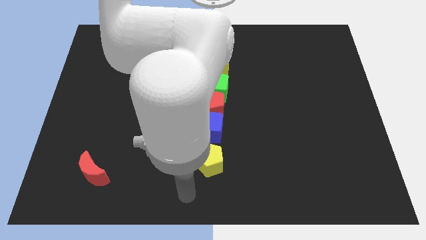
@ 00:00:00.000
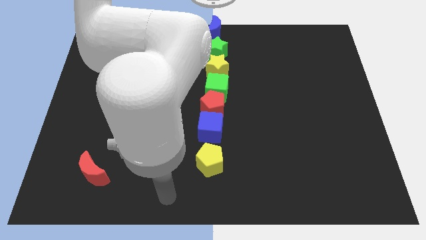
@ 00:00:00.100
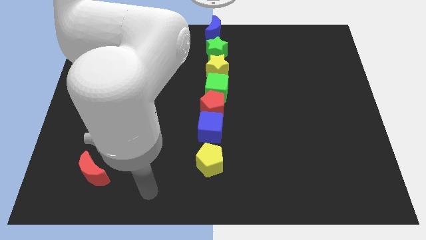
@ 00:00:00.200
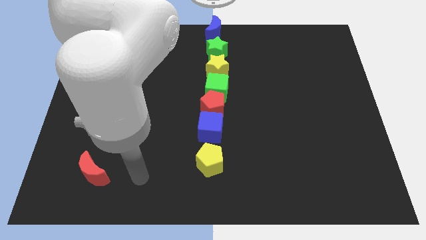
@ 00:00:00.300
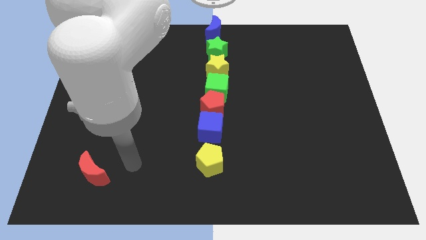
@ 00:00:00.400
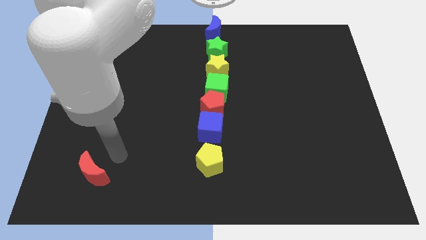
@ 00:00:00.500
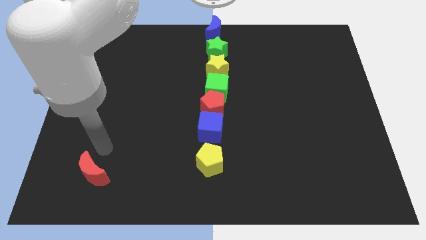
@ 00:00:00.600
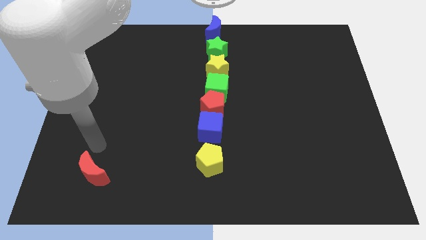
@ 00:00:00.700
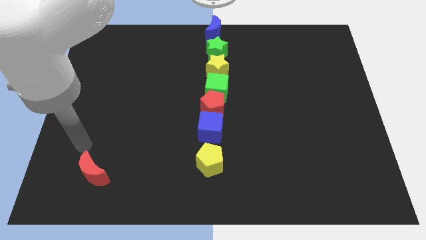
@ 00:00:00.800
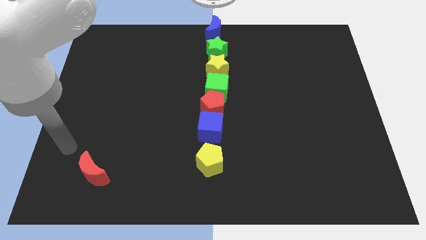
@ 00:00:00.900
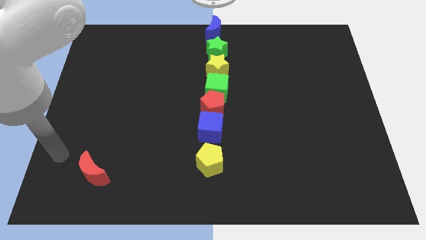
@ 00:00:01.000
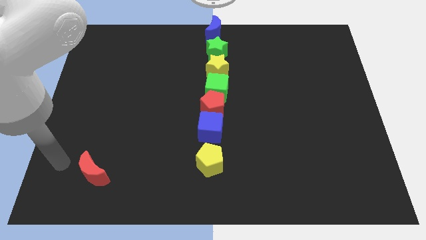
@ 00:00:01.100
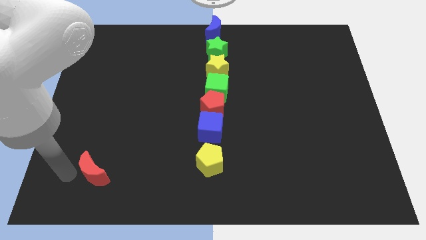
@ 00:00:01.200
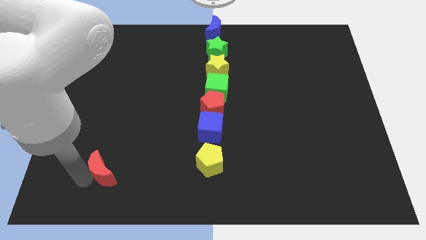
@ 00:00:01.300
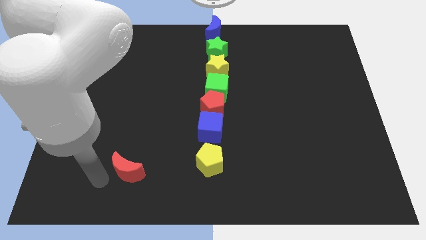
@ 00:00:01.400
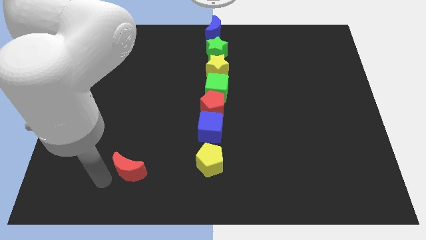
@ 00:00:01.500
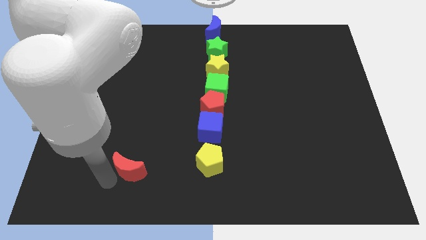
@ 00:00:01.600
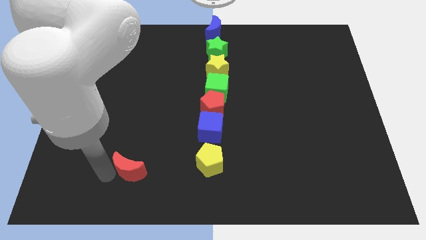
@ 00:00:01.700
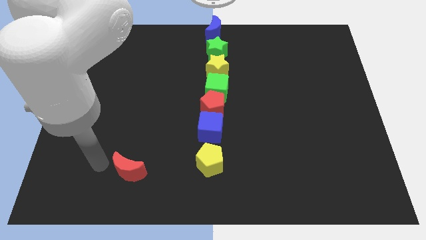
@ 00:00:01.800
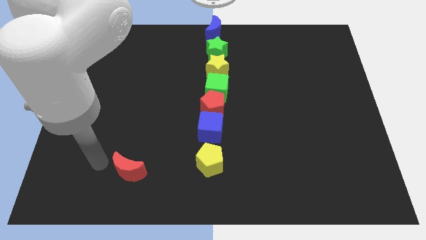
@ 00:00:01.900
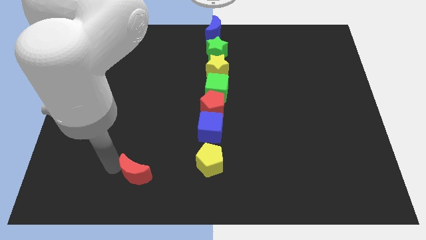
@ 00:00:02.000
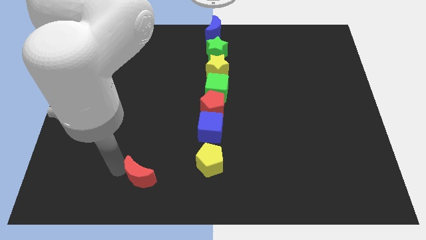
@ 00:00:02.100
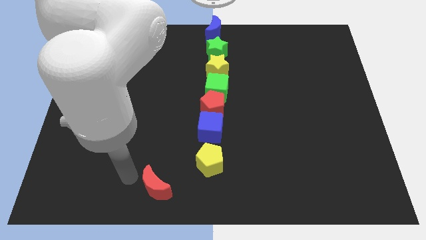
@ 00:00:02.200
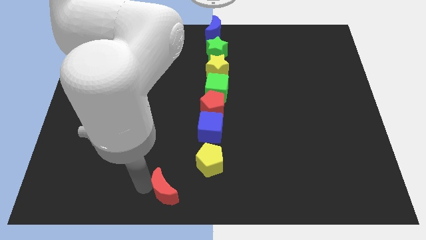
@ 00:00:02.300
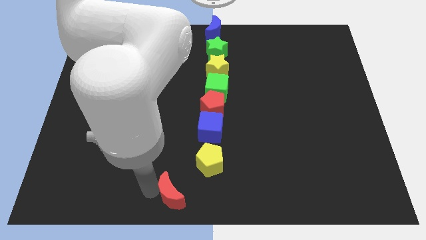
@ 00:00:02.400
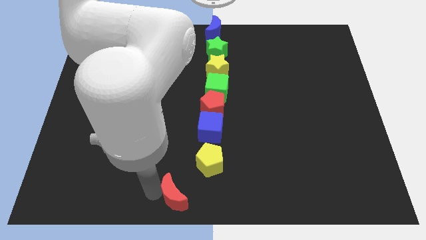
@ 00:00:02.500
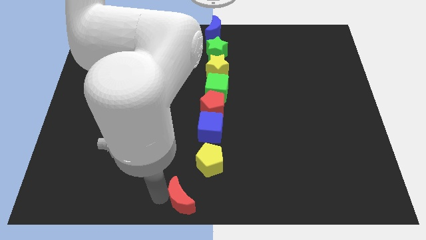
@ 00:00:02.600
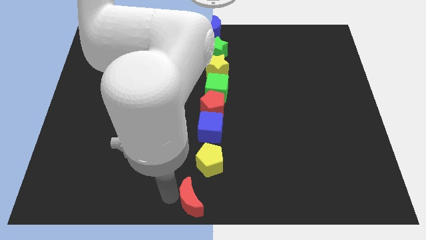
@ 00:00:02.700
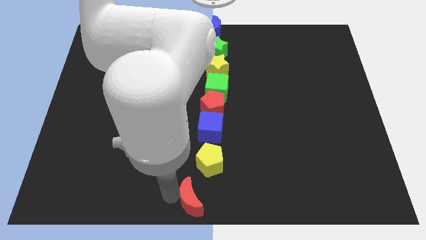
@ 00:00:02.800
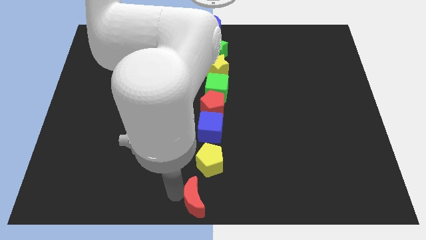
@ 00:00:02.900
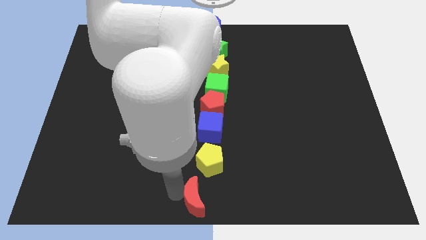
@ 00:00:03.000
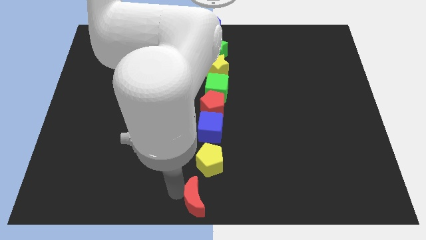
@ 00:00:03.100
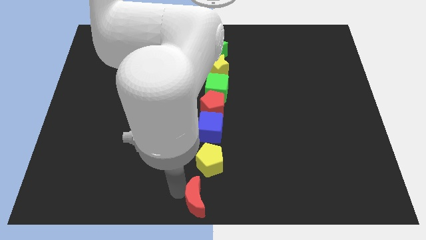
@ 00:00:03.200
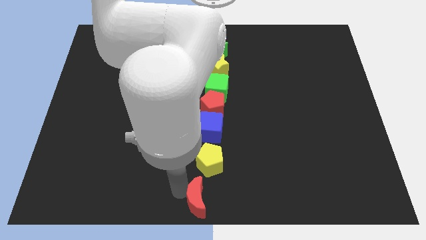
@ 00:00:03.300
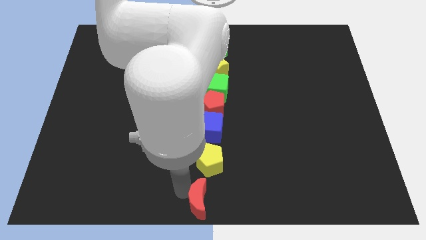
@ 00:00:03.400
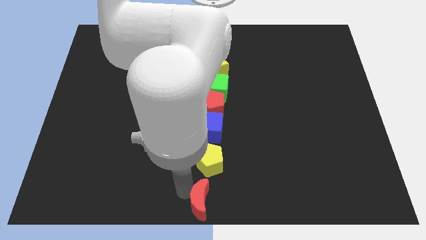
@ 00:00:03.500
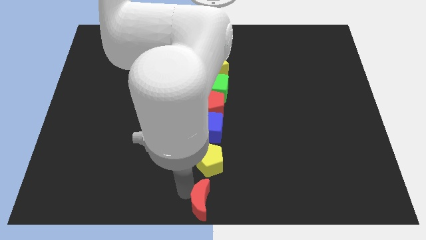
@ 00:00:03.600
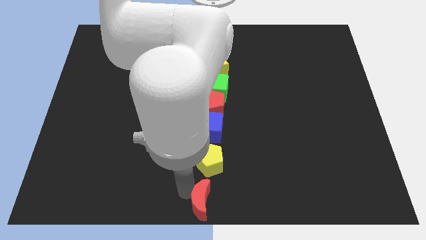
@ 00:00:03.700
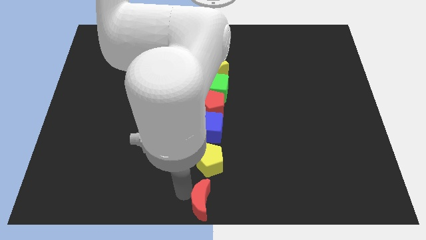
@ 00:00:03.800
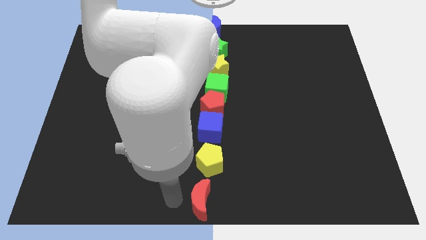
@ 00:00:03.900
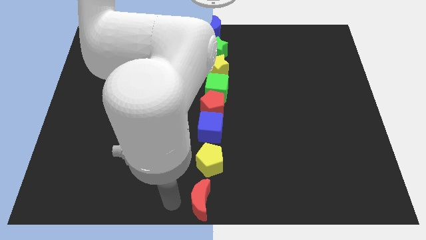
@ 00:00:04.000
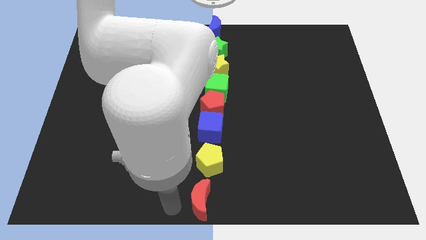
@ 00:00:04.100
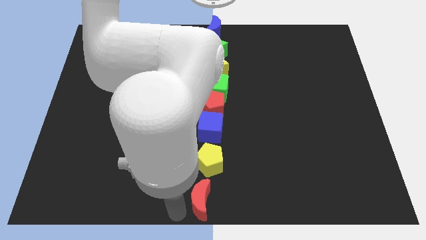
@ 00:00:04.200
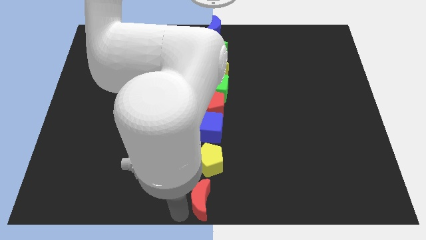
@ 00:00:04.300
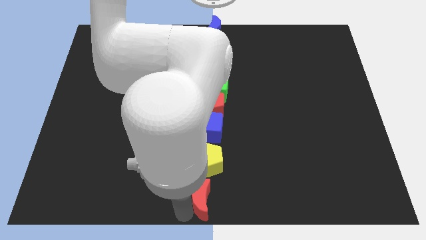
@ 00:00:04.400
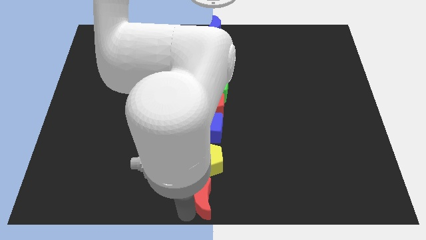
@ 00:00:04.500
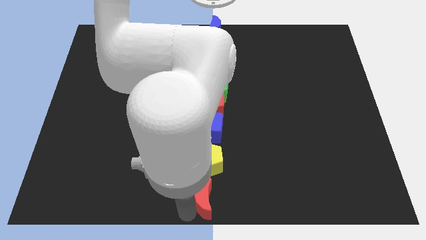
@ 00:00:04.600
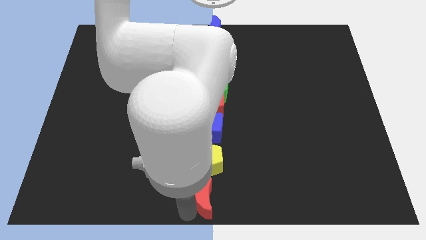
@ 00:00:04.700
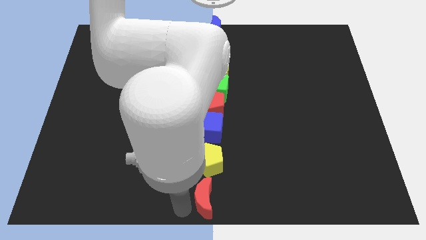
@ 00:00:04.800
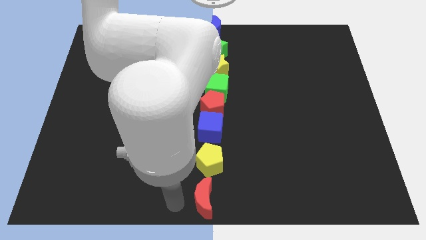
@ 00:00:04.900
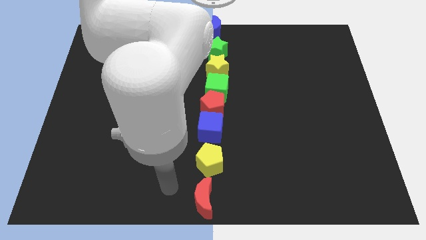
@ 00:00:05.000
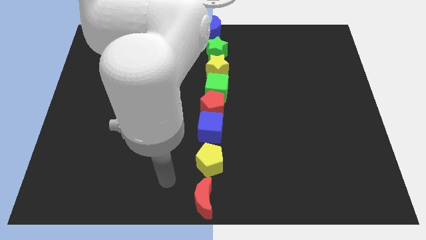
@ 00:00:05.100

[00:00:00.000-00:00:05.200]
move the red moon below the yellow pentagon to form a vertical line

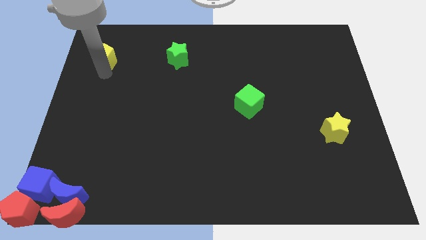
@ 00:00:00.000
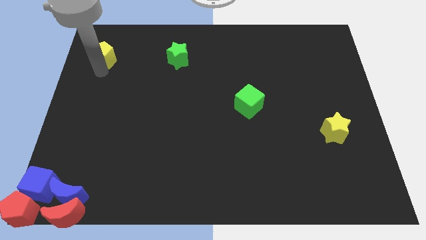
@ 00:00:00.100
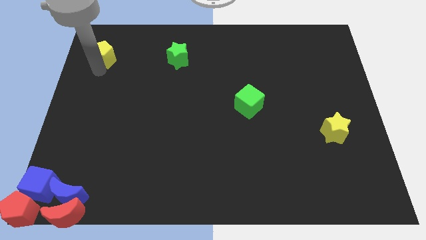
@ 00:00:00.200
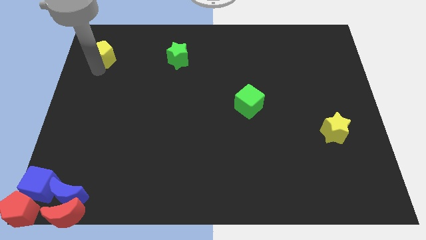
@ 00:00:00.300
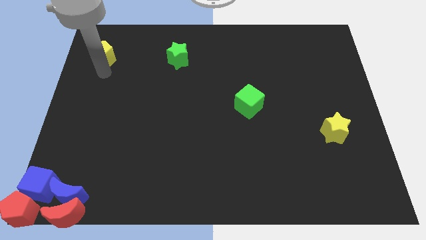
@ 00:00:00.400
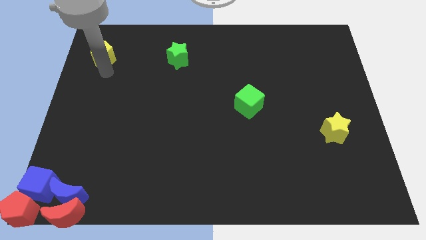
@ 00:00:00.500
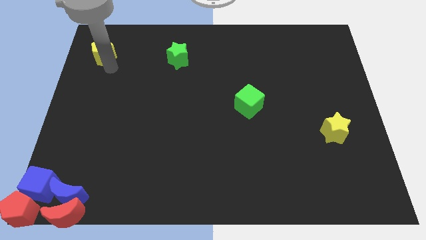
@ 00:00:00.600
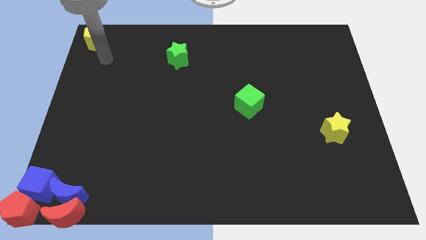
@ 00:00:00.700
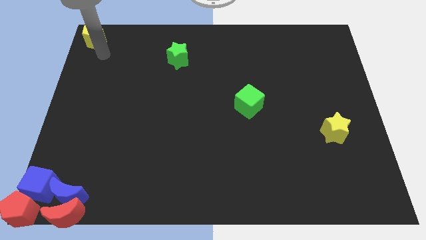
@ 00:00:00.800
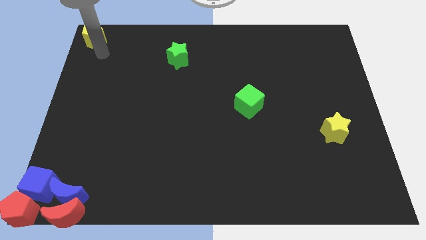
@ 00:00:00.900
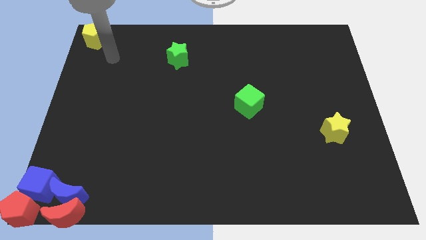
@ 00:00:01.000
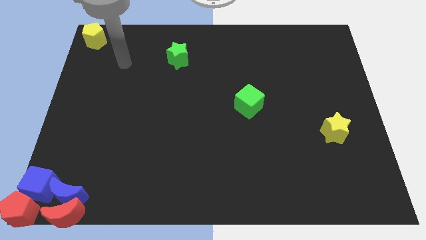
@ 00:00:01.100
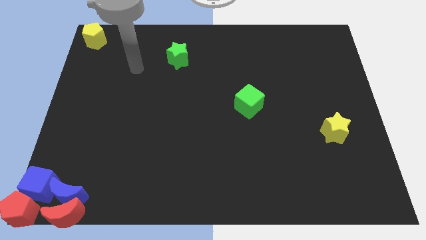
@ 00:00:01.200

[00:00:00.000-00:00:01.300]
move yellow pentagon to the top left corner of the board

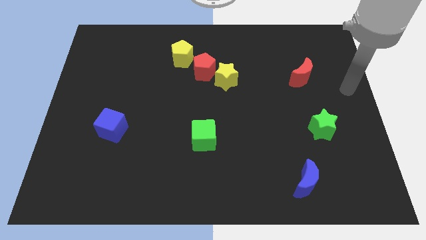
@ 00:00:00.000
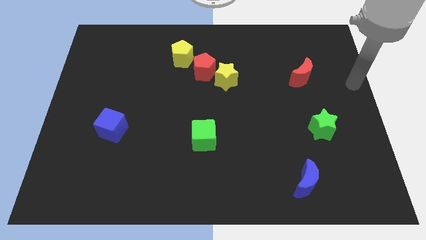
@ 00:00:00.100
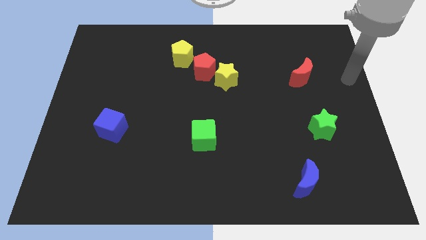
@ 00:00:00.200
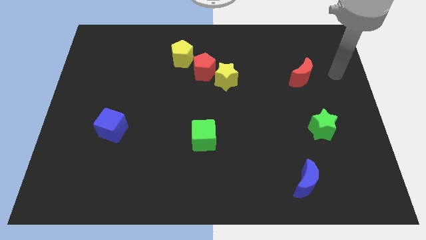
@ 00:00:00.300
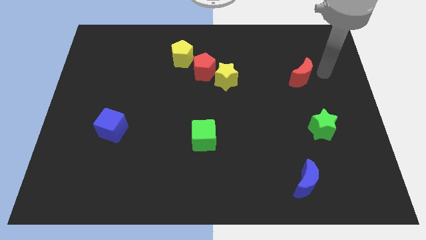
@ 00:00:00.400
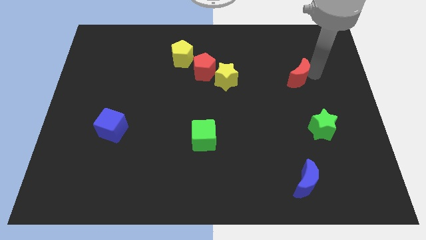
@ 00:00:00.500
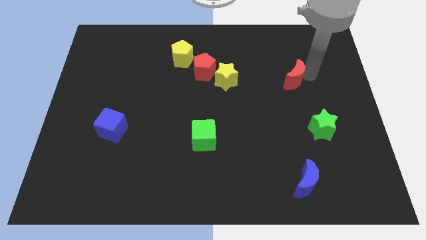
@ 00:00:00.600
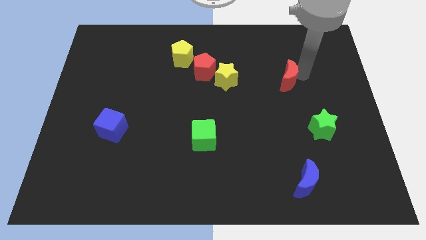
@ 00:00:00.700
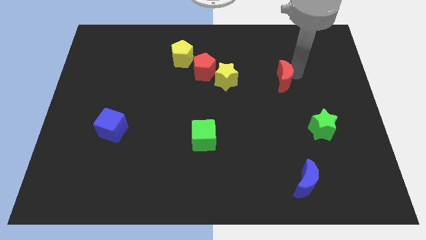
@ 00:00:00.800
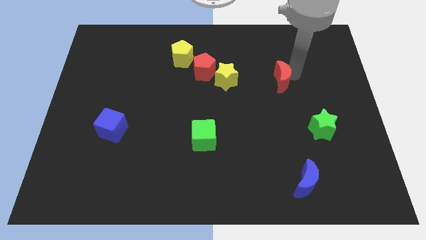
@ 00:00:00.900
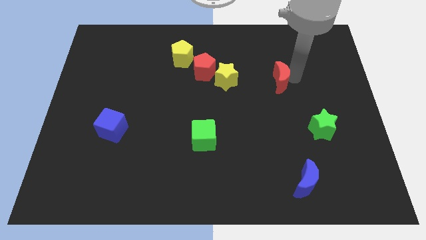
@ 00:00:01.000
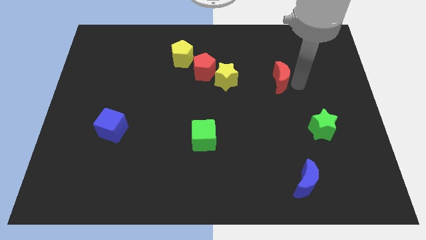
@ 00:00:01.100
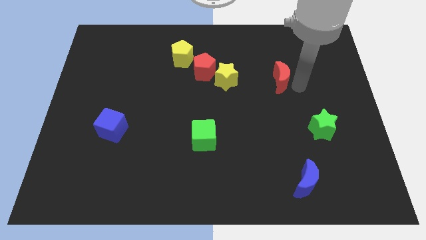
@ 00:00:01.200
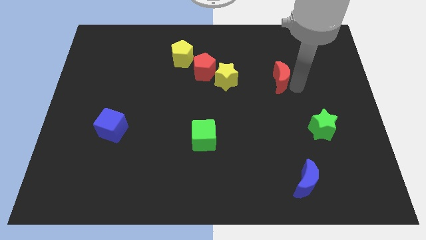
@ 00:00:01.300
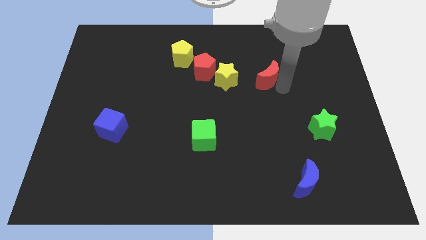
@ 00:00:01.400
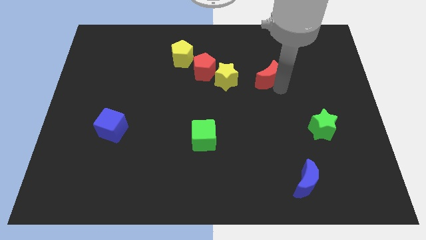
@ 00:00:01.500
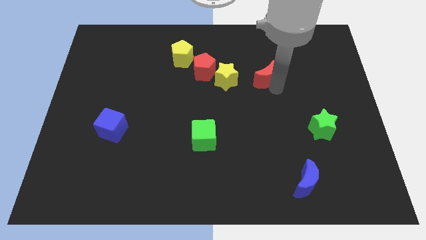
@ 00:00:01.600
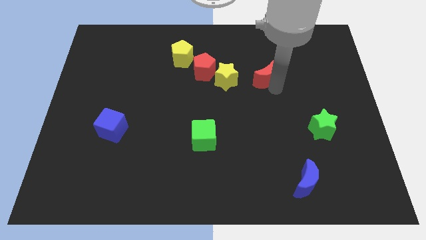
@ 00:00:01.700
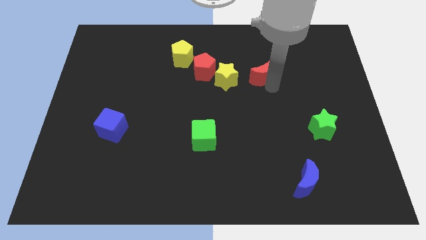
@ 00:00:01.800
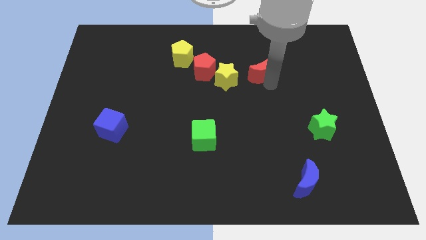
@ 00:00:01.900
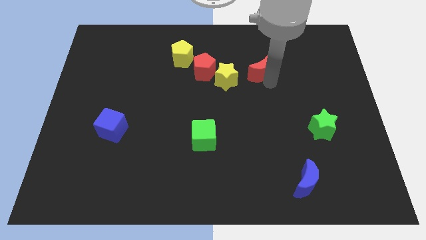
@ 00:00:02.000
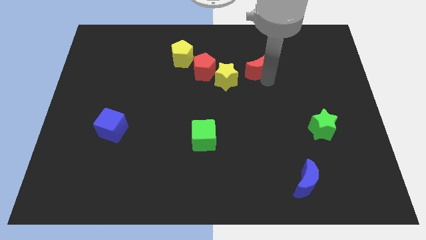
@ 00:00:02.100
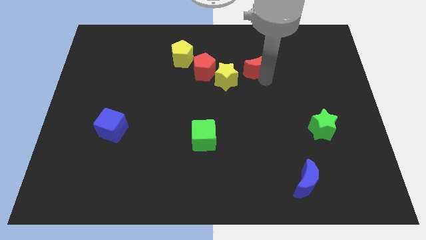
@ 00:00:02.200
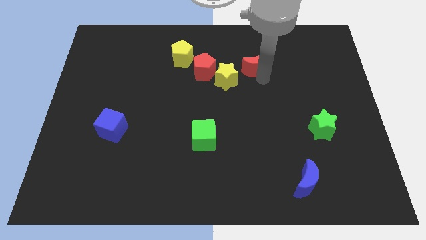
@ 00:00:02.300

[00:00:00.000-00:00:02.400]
slide red moon towards yellow star
